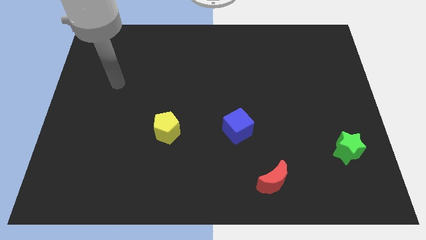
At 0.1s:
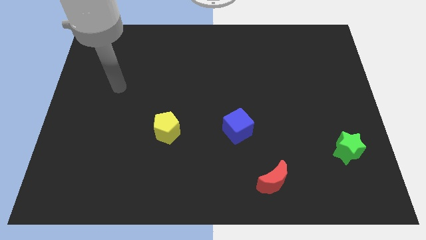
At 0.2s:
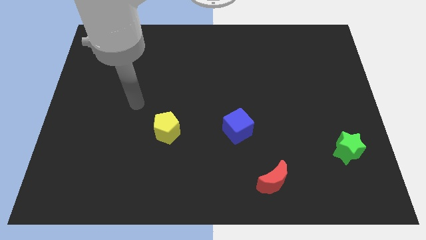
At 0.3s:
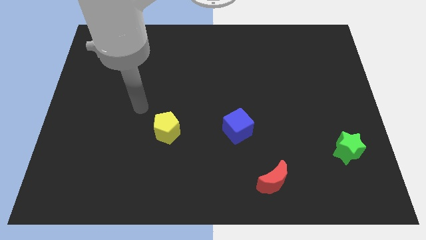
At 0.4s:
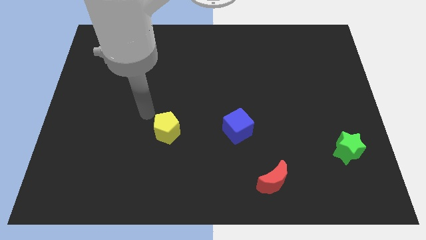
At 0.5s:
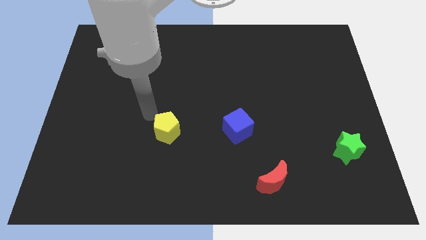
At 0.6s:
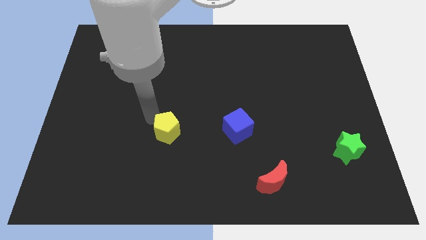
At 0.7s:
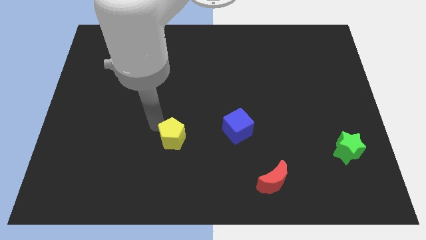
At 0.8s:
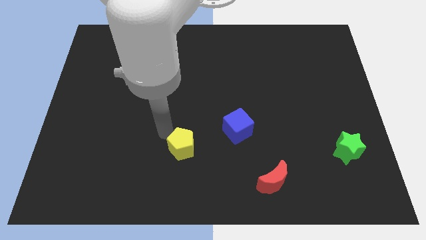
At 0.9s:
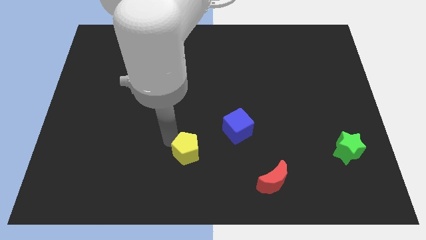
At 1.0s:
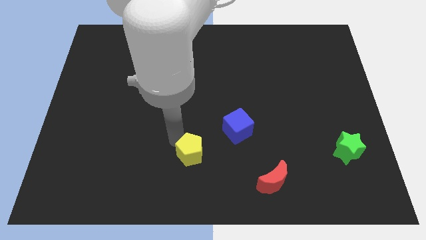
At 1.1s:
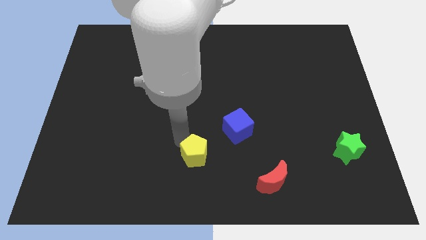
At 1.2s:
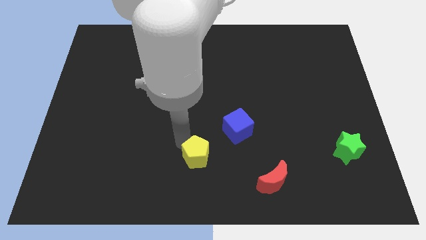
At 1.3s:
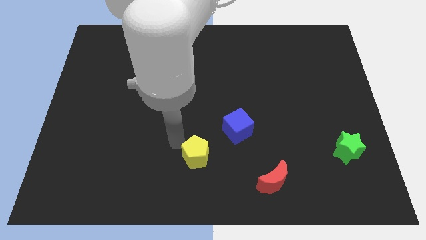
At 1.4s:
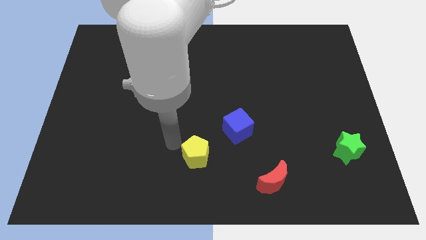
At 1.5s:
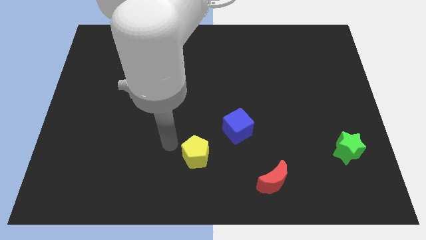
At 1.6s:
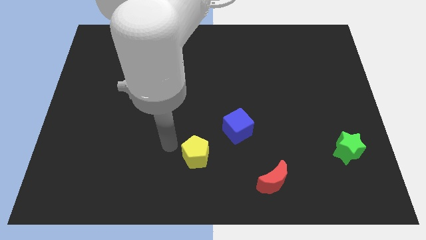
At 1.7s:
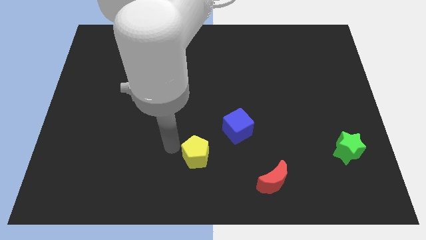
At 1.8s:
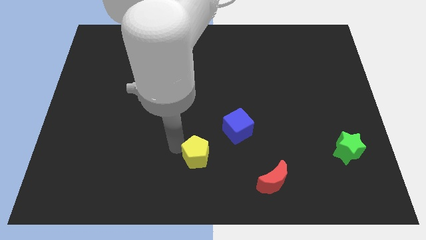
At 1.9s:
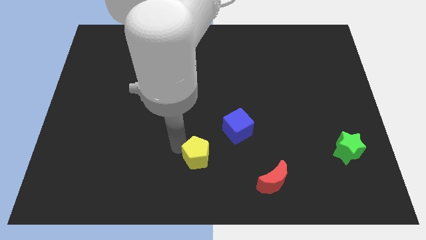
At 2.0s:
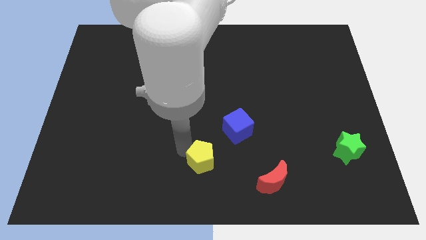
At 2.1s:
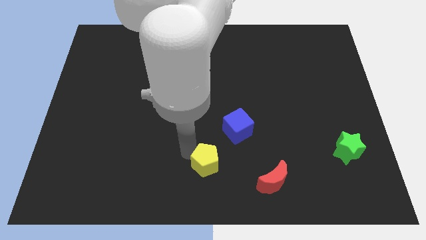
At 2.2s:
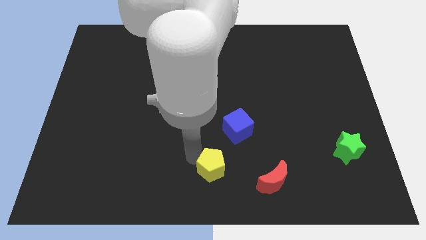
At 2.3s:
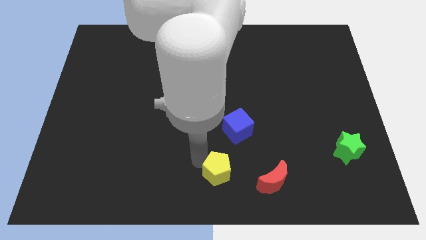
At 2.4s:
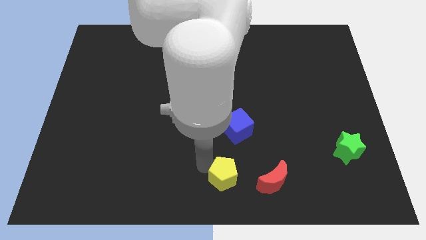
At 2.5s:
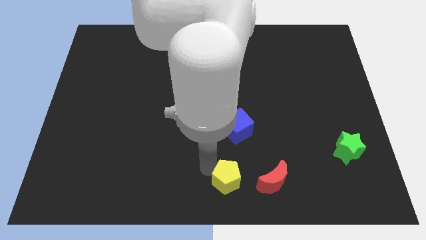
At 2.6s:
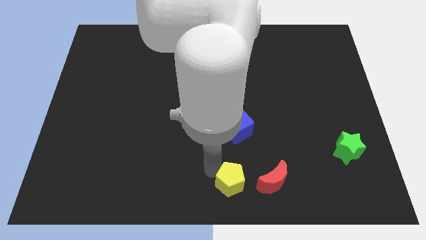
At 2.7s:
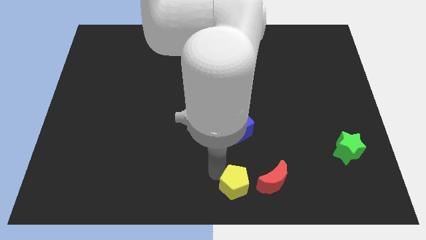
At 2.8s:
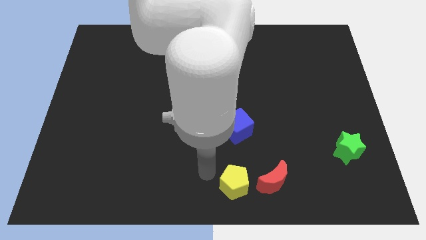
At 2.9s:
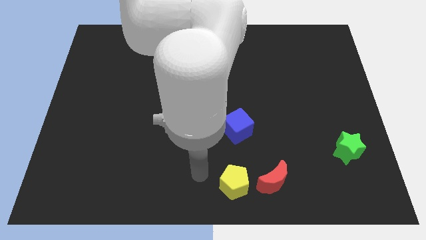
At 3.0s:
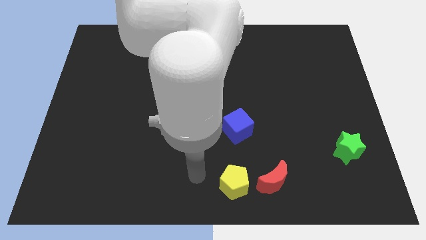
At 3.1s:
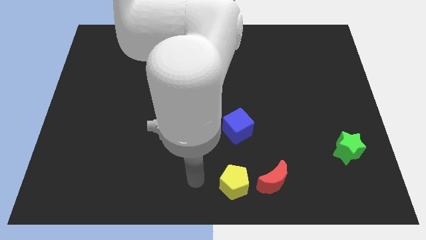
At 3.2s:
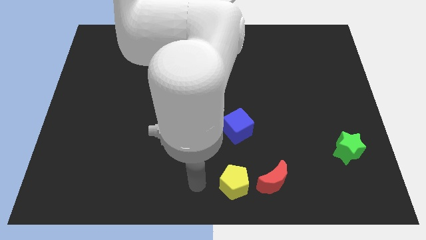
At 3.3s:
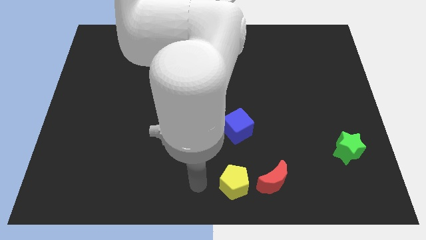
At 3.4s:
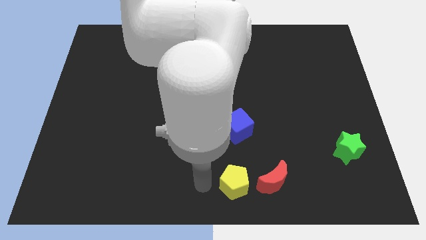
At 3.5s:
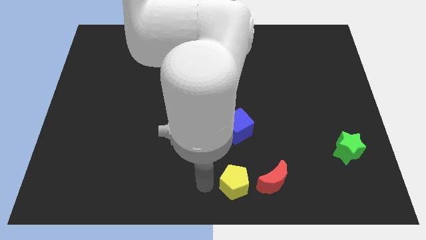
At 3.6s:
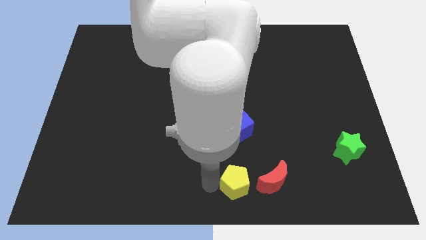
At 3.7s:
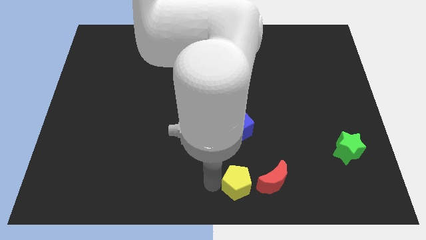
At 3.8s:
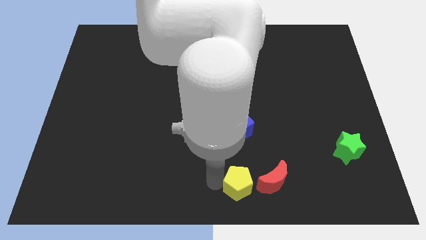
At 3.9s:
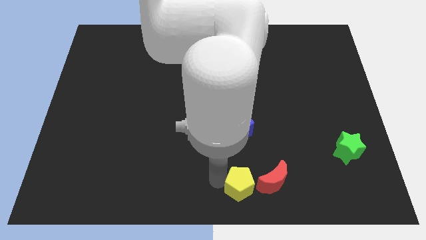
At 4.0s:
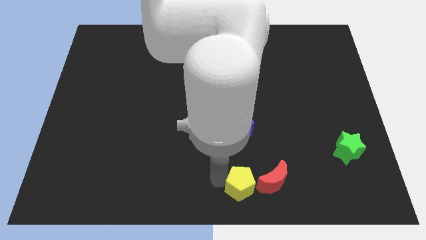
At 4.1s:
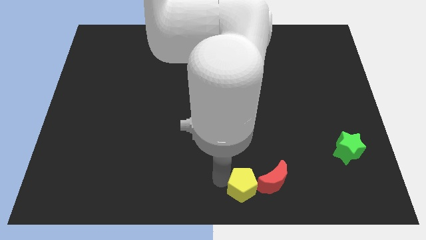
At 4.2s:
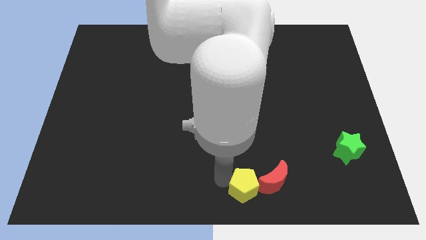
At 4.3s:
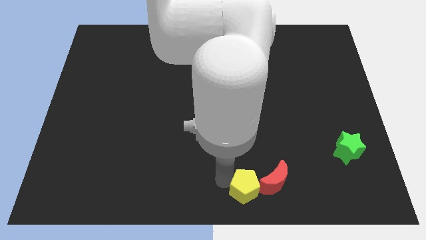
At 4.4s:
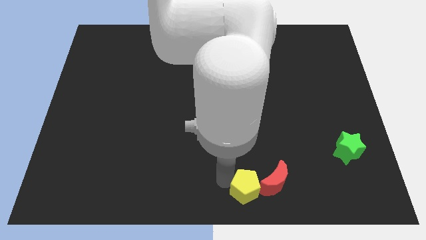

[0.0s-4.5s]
slide the pentagon to the red moon

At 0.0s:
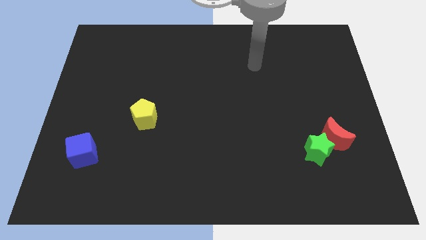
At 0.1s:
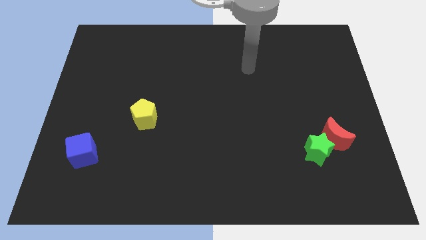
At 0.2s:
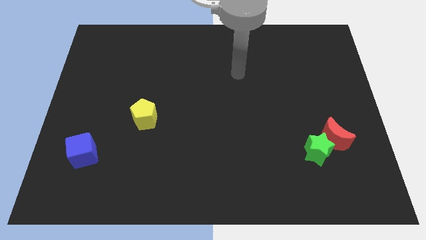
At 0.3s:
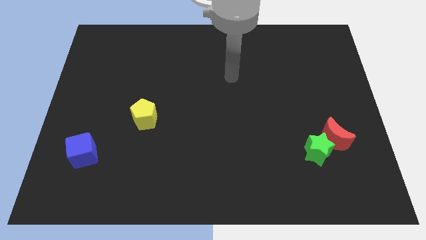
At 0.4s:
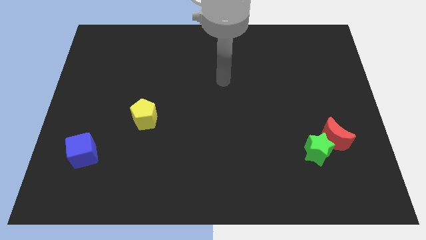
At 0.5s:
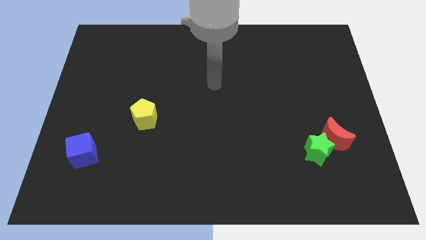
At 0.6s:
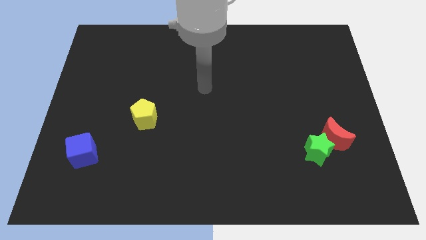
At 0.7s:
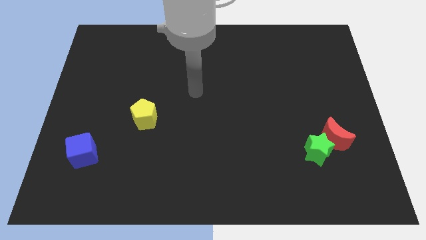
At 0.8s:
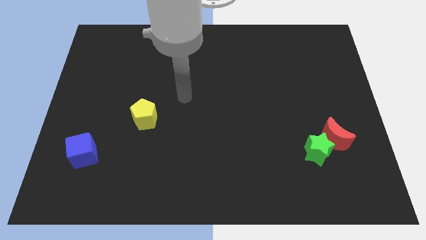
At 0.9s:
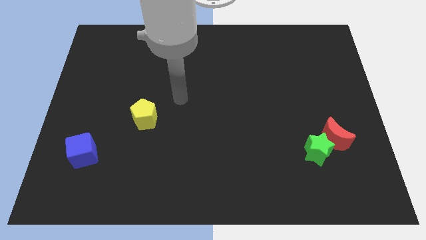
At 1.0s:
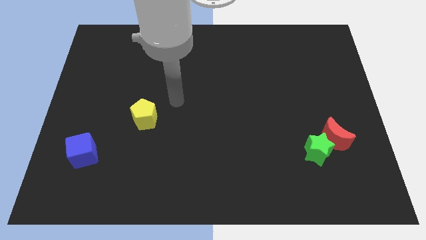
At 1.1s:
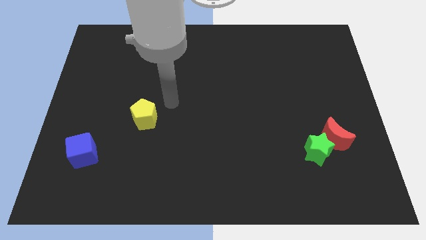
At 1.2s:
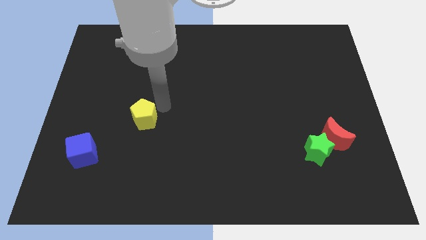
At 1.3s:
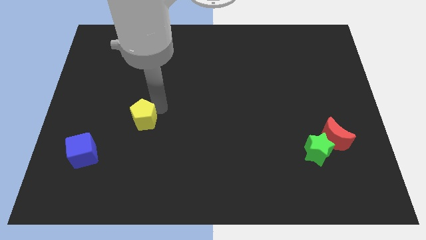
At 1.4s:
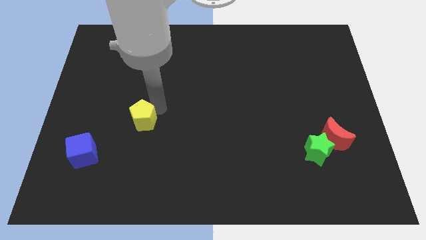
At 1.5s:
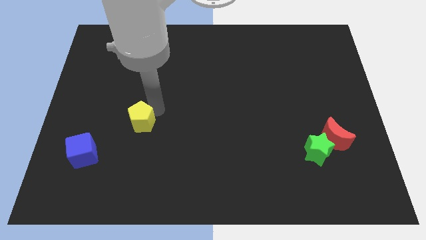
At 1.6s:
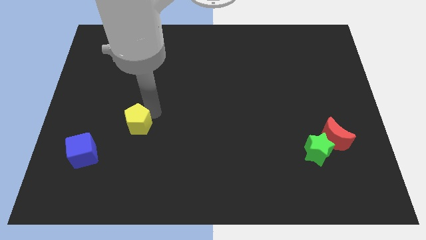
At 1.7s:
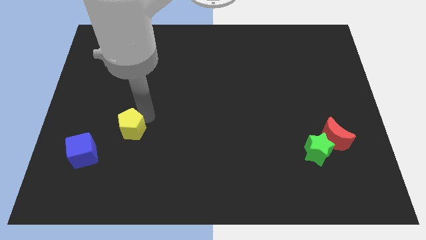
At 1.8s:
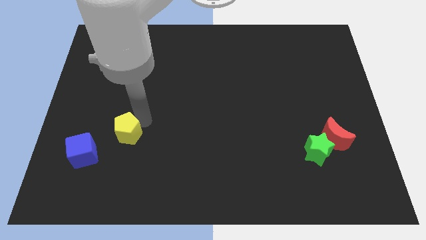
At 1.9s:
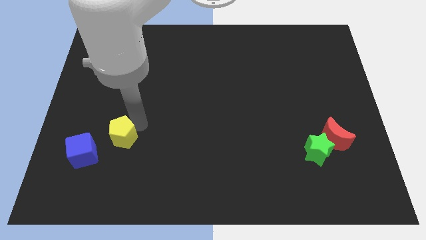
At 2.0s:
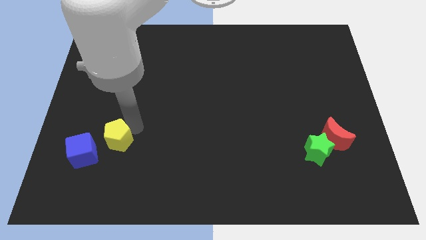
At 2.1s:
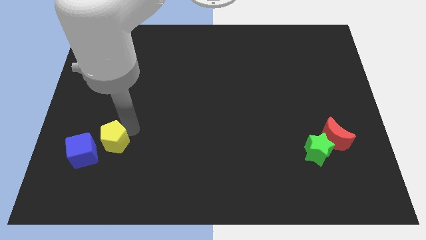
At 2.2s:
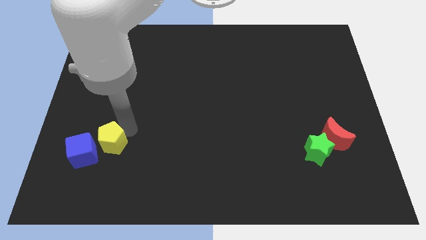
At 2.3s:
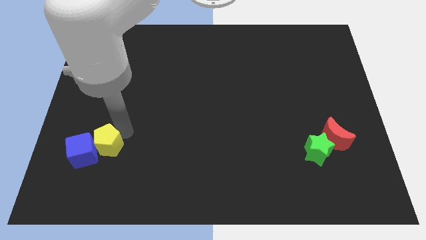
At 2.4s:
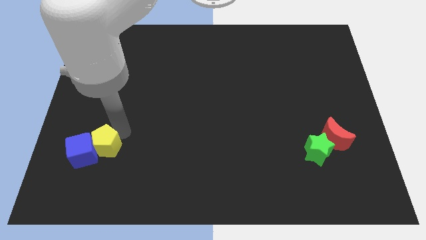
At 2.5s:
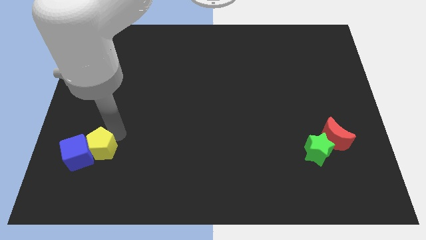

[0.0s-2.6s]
move the yellow block towards the blue block

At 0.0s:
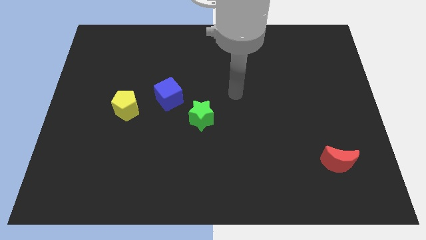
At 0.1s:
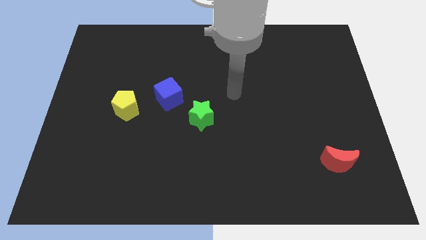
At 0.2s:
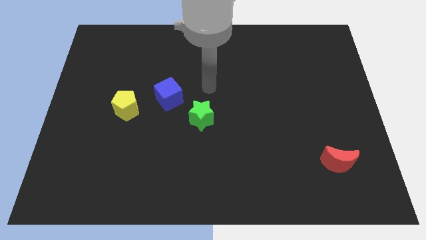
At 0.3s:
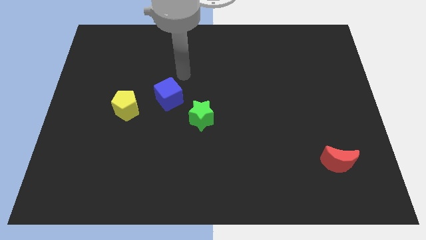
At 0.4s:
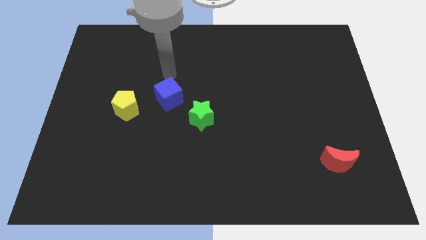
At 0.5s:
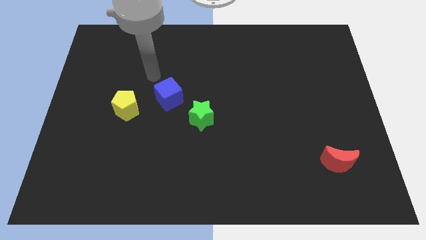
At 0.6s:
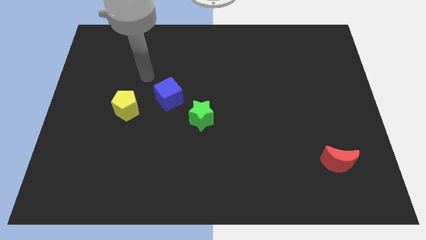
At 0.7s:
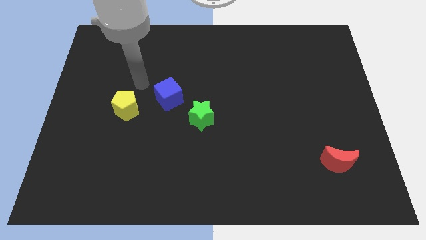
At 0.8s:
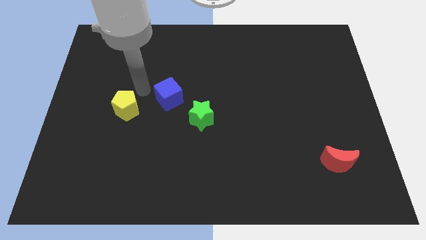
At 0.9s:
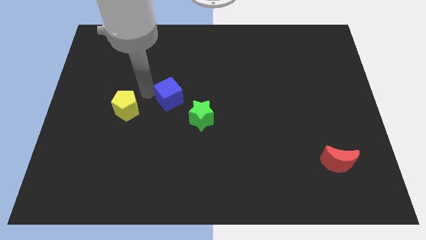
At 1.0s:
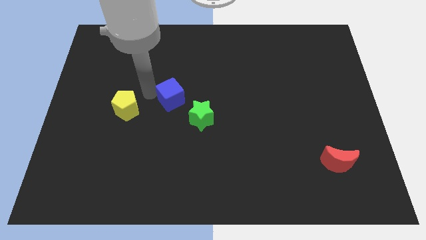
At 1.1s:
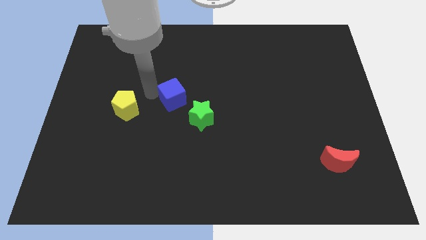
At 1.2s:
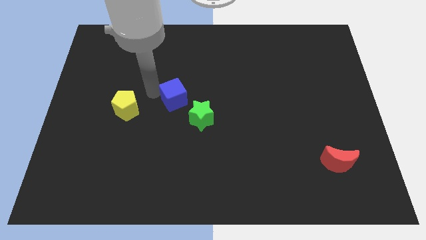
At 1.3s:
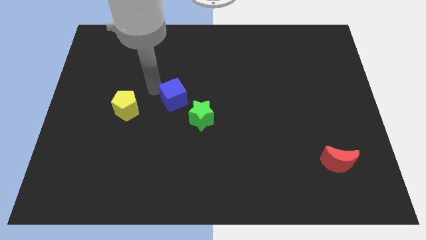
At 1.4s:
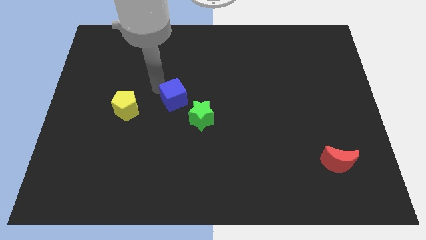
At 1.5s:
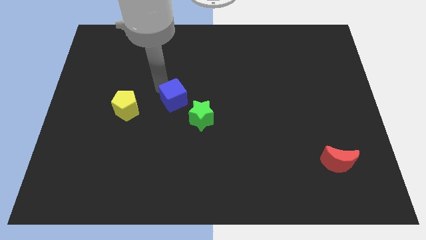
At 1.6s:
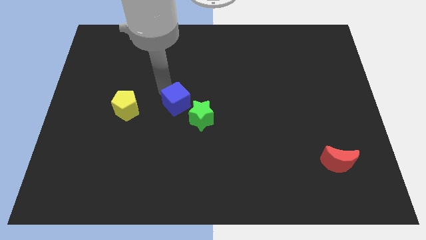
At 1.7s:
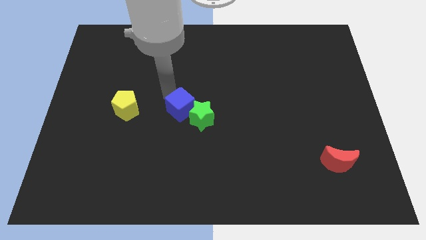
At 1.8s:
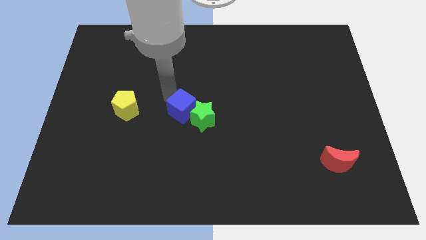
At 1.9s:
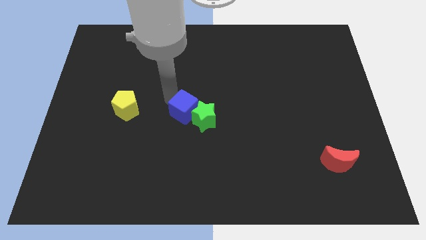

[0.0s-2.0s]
push the blue cube close to the green block
